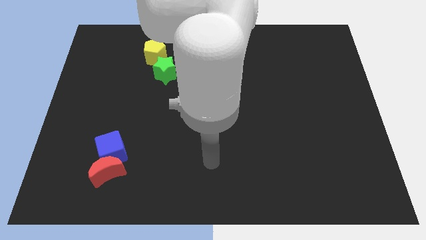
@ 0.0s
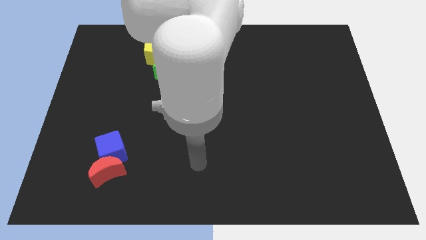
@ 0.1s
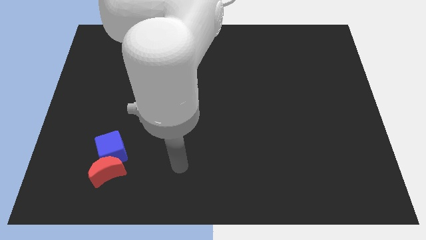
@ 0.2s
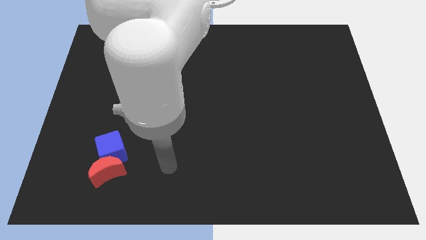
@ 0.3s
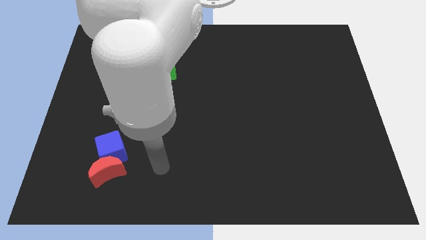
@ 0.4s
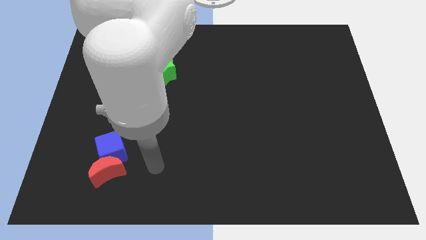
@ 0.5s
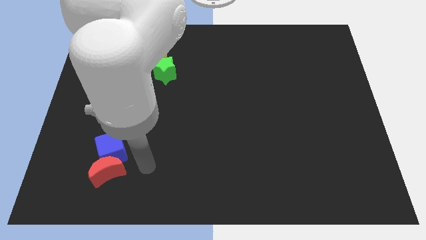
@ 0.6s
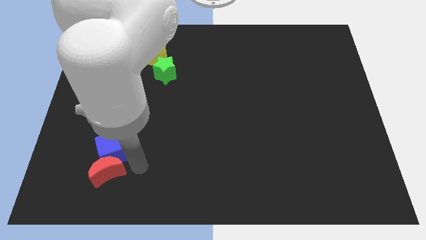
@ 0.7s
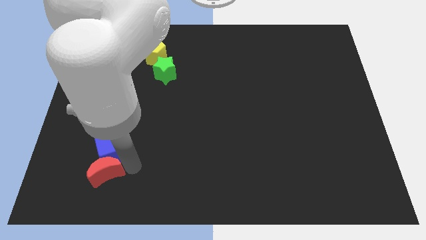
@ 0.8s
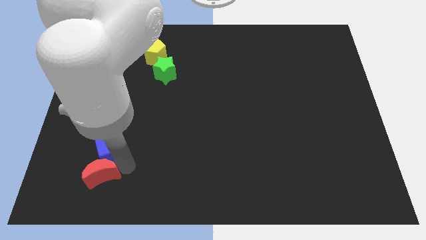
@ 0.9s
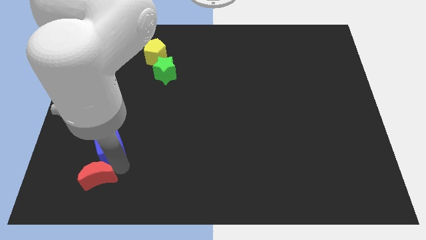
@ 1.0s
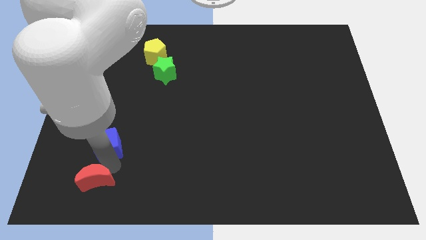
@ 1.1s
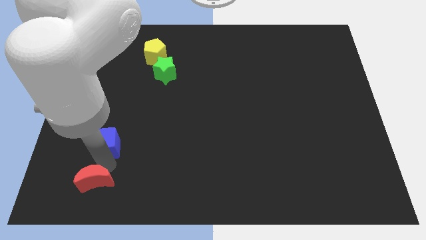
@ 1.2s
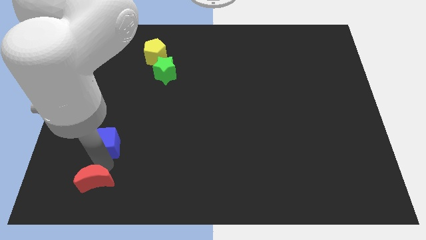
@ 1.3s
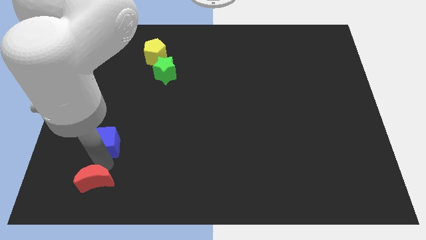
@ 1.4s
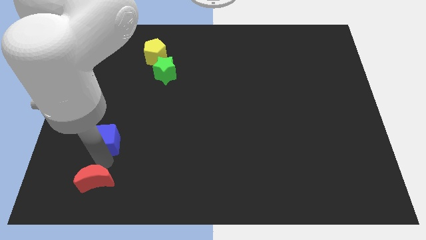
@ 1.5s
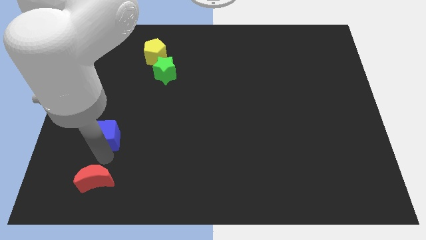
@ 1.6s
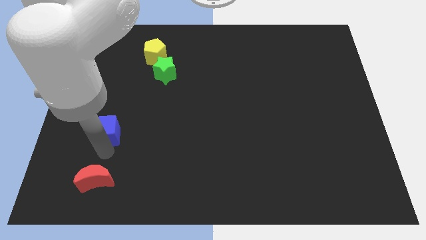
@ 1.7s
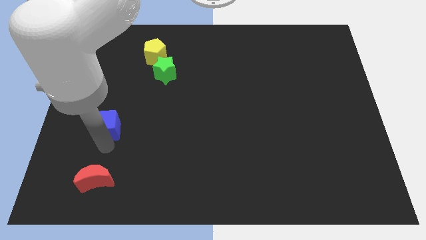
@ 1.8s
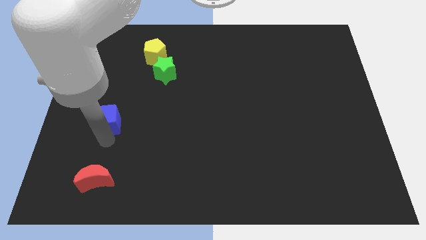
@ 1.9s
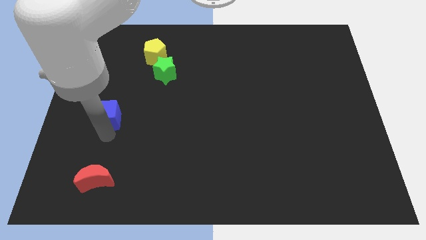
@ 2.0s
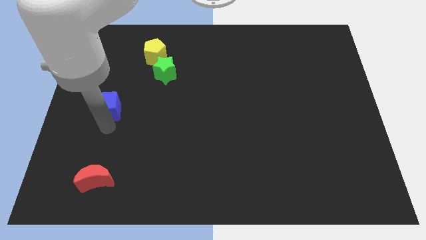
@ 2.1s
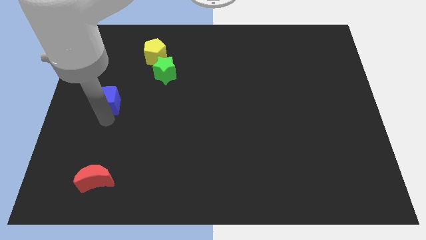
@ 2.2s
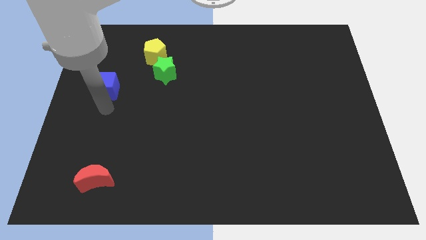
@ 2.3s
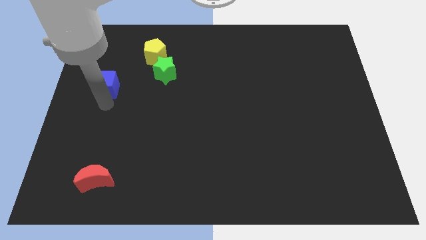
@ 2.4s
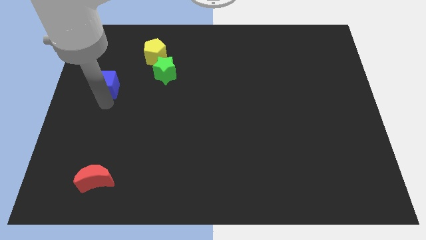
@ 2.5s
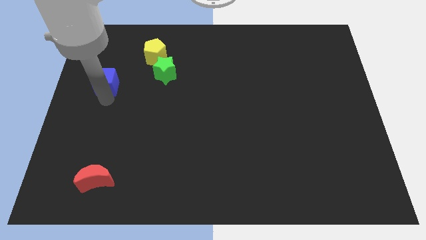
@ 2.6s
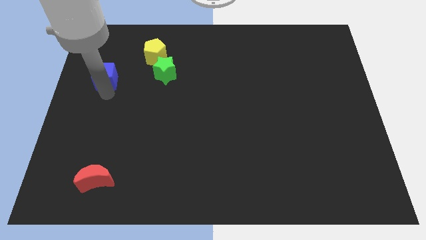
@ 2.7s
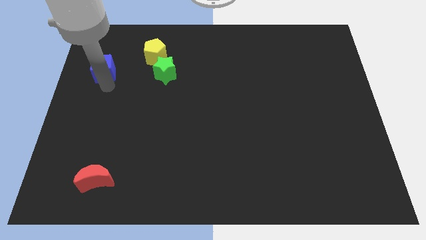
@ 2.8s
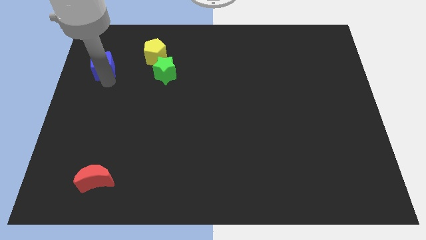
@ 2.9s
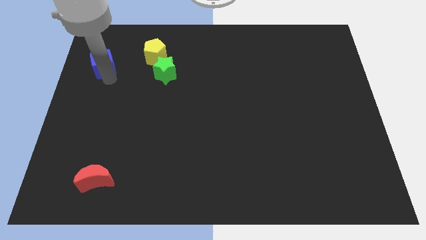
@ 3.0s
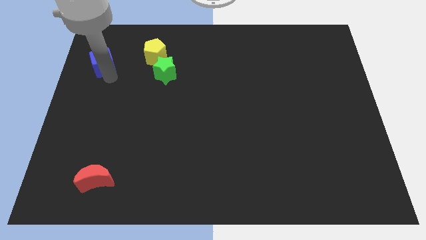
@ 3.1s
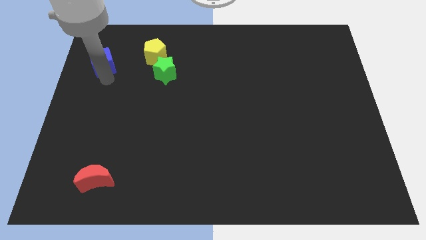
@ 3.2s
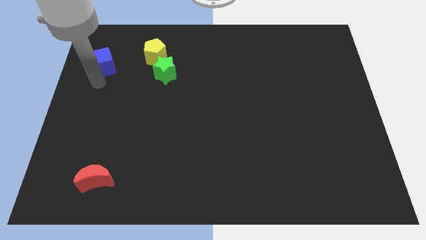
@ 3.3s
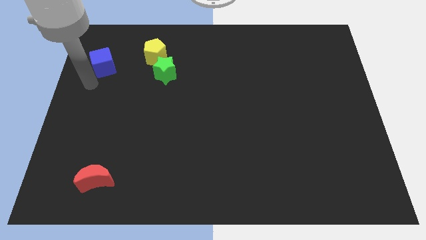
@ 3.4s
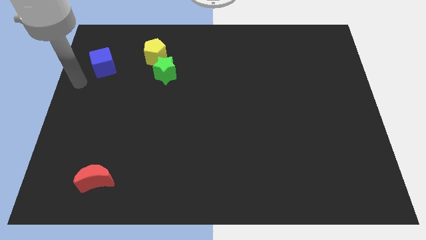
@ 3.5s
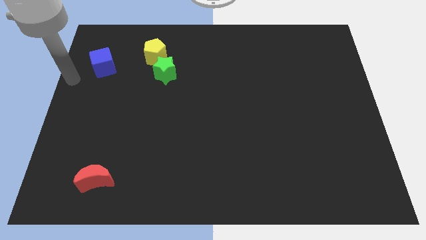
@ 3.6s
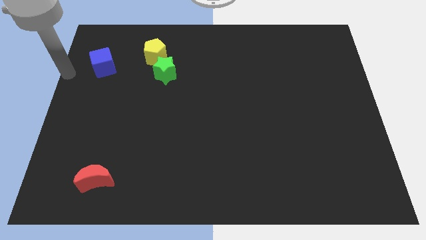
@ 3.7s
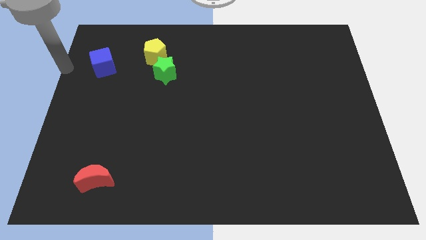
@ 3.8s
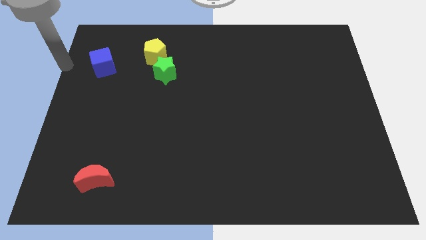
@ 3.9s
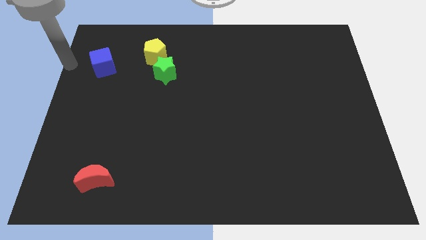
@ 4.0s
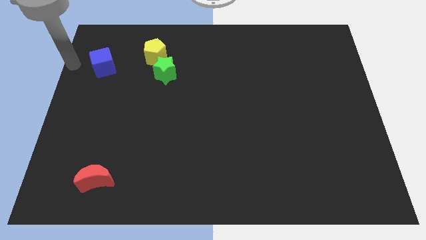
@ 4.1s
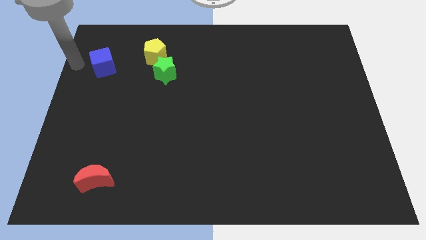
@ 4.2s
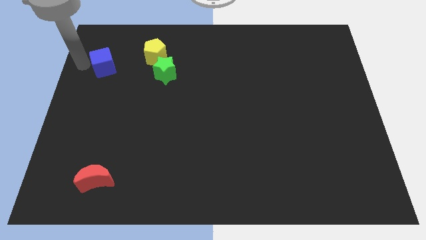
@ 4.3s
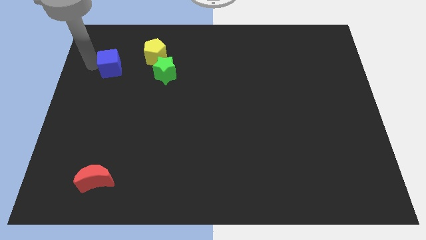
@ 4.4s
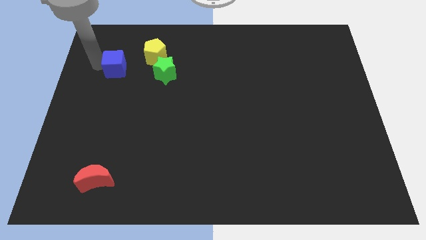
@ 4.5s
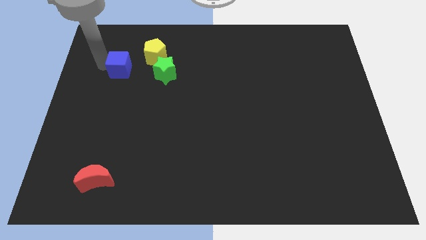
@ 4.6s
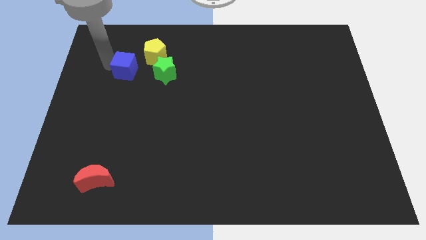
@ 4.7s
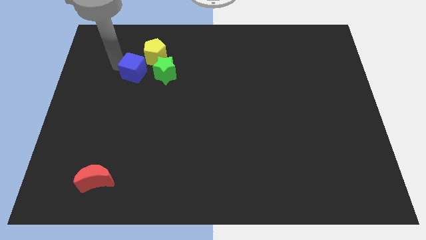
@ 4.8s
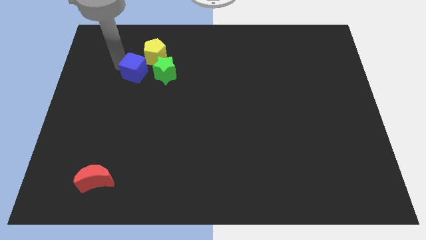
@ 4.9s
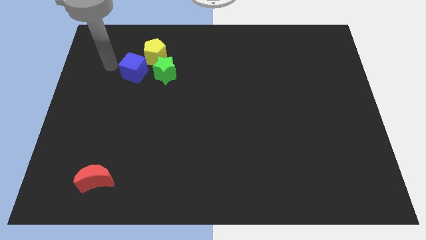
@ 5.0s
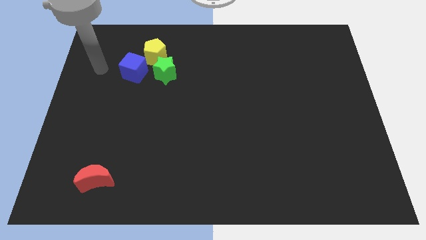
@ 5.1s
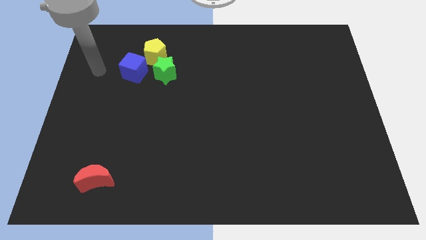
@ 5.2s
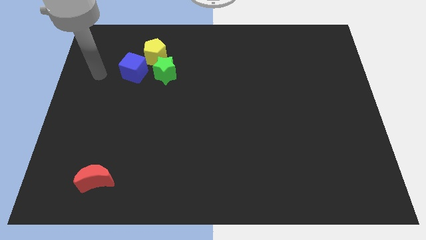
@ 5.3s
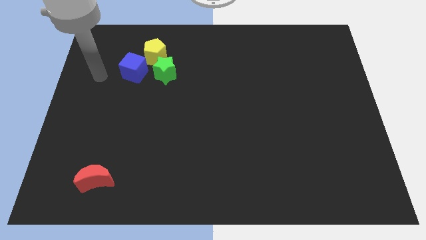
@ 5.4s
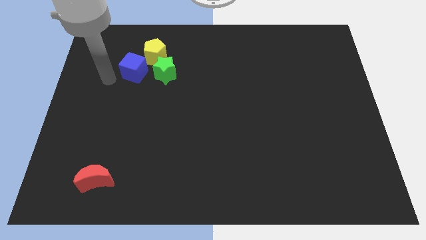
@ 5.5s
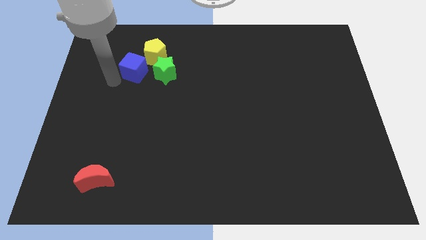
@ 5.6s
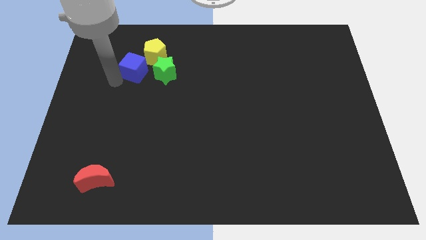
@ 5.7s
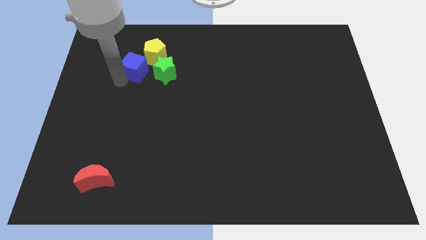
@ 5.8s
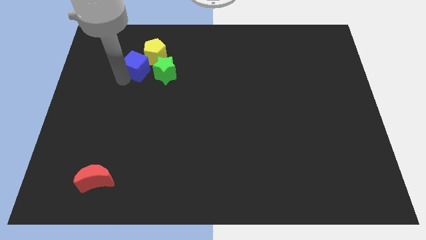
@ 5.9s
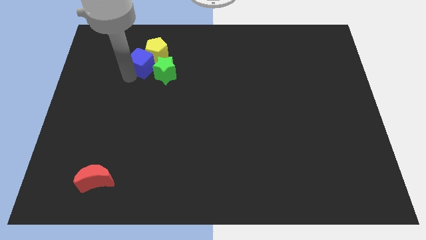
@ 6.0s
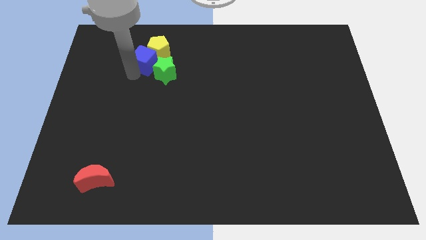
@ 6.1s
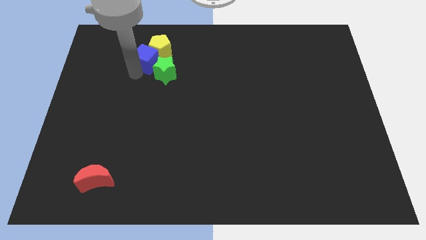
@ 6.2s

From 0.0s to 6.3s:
push the cube next to the yellow block

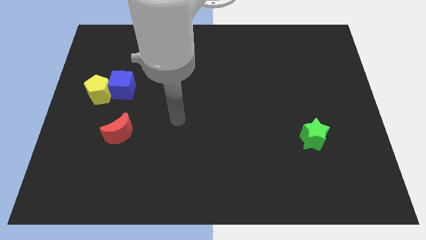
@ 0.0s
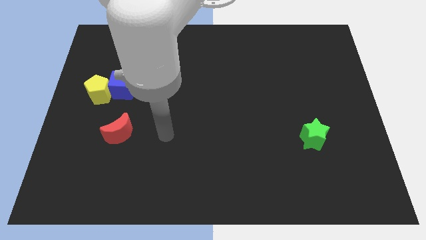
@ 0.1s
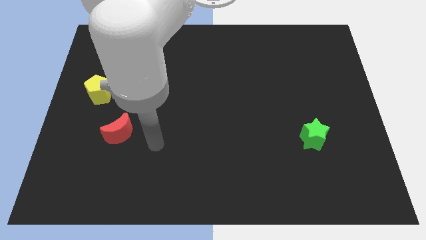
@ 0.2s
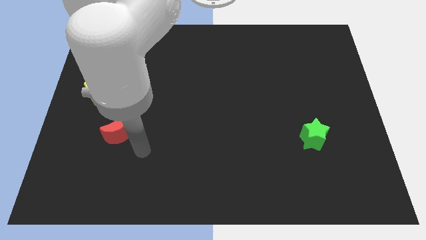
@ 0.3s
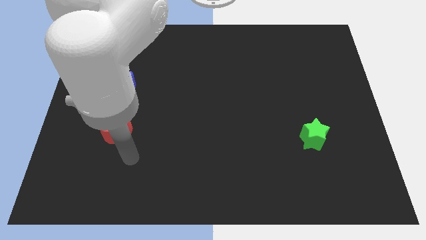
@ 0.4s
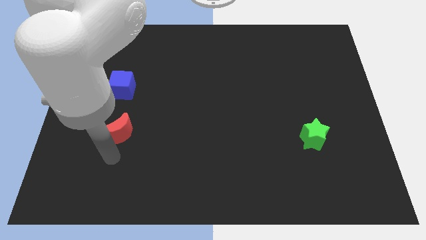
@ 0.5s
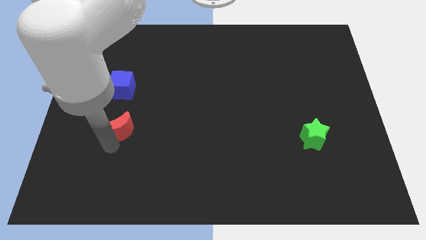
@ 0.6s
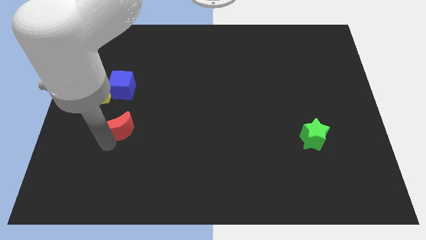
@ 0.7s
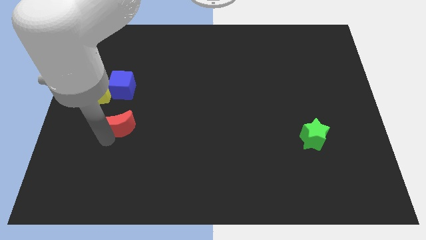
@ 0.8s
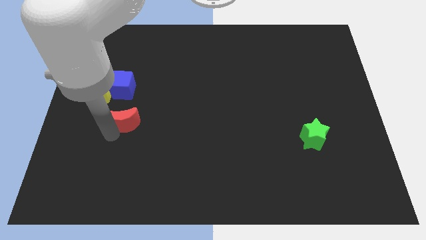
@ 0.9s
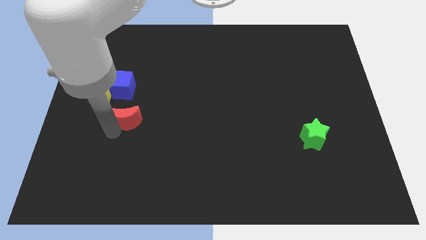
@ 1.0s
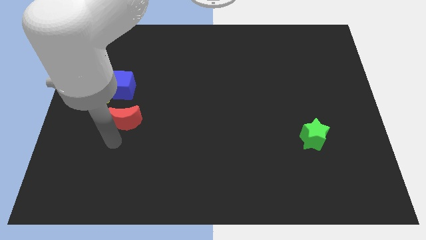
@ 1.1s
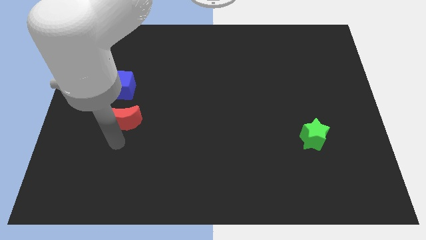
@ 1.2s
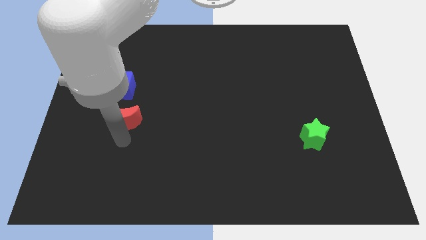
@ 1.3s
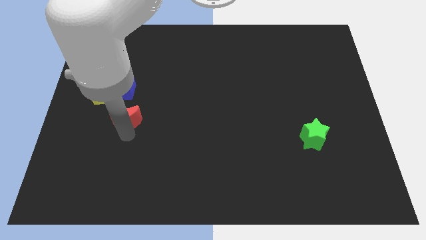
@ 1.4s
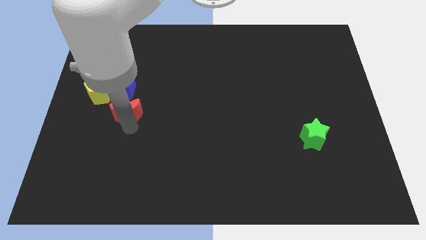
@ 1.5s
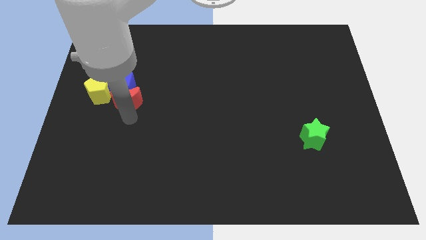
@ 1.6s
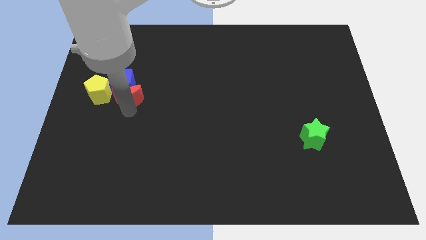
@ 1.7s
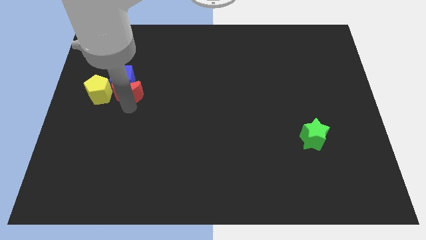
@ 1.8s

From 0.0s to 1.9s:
push the red moon towards the cube

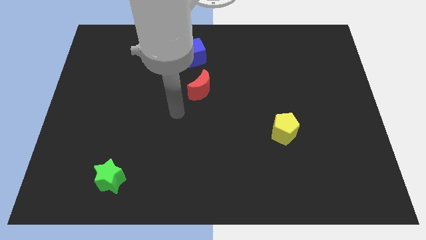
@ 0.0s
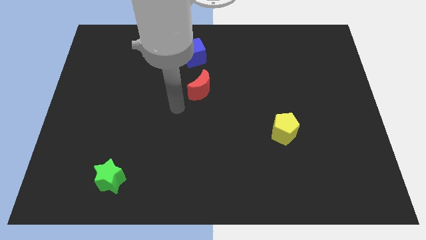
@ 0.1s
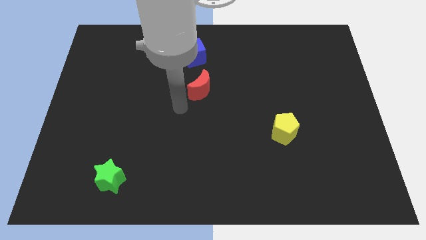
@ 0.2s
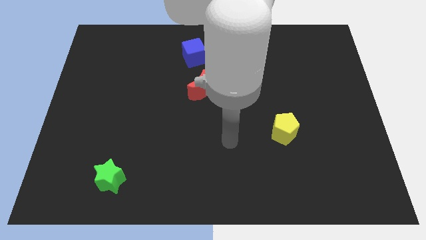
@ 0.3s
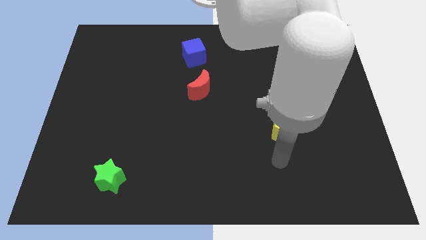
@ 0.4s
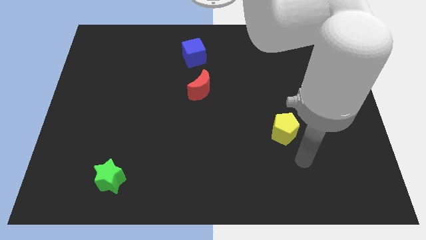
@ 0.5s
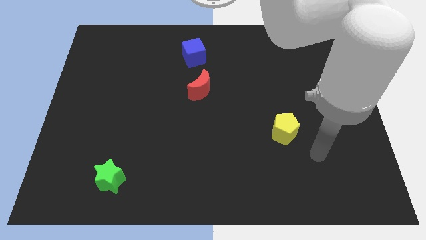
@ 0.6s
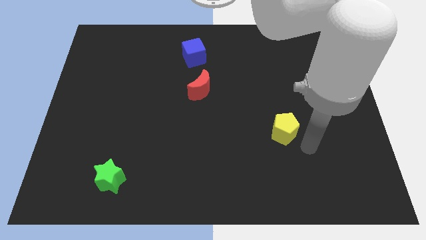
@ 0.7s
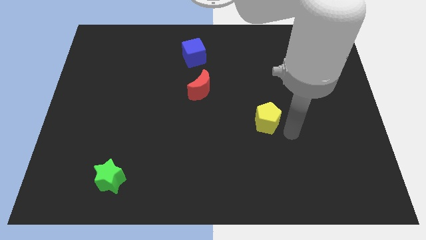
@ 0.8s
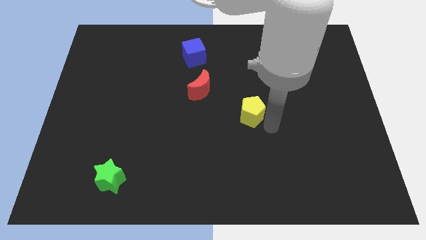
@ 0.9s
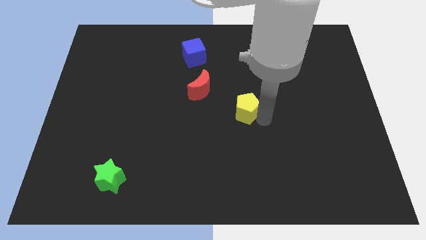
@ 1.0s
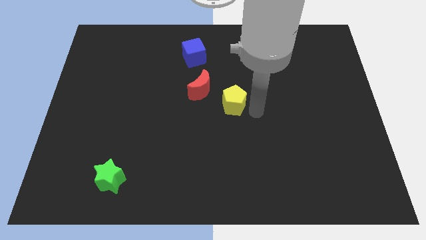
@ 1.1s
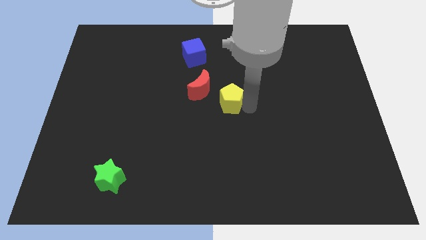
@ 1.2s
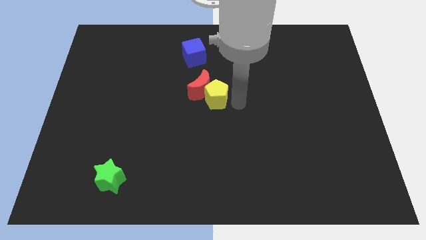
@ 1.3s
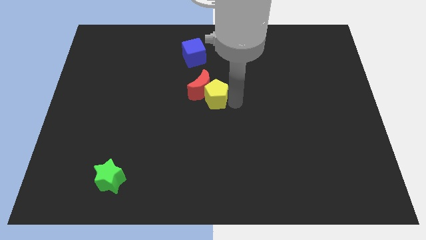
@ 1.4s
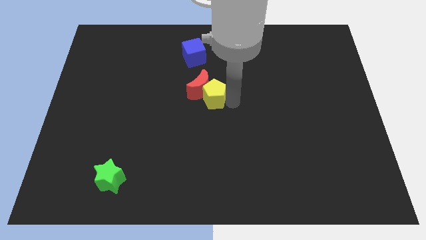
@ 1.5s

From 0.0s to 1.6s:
push the yellow block next to the moon
